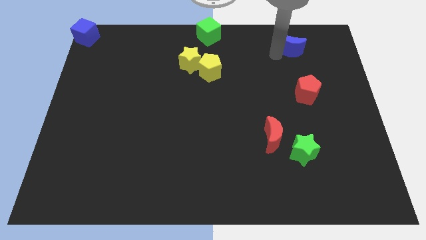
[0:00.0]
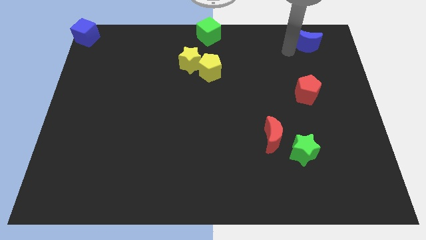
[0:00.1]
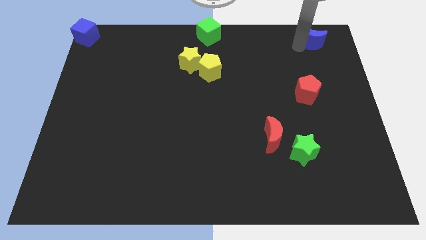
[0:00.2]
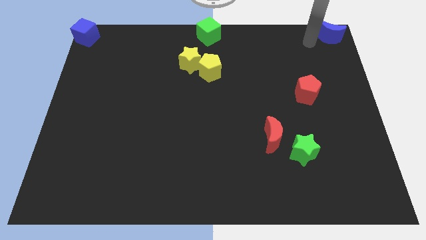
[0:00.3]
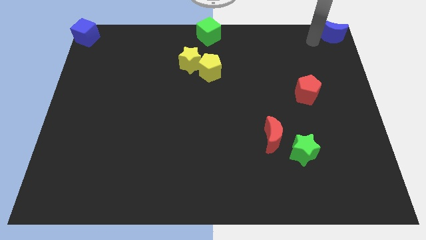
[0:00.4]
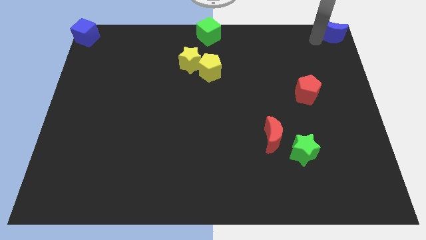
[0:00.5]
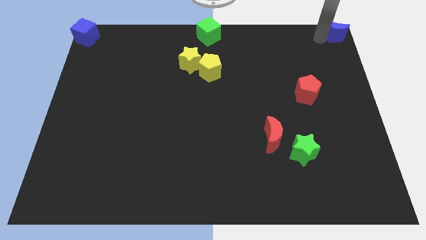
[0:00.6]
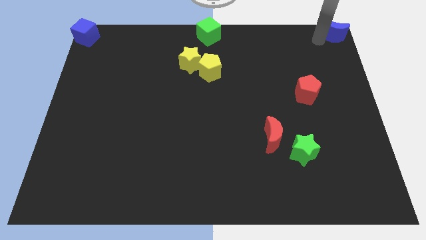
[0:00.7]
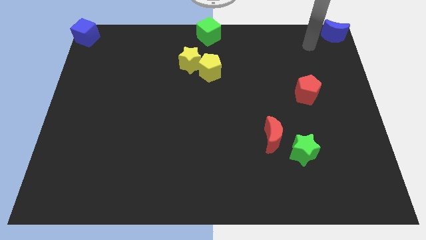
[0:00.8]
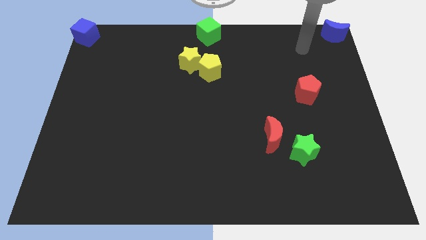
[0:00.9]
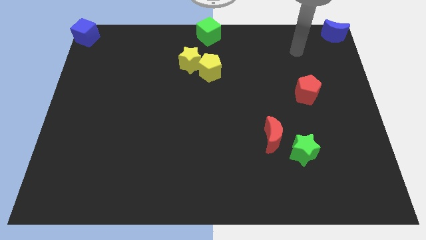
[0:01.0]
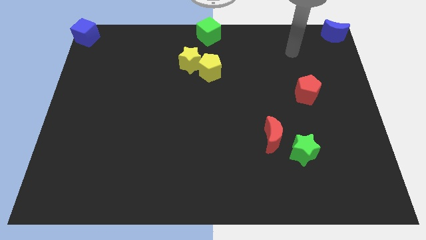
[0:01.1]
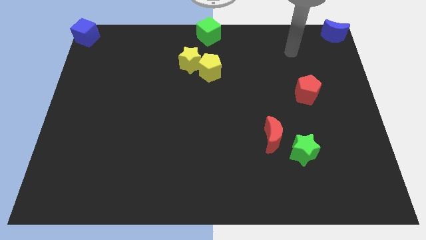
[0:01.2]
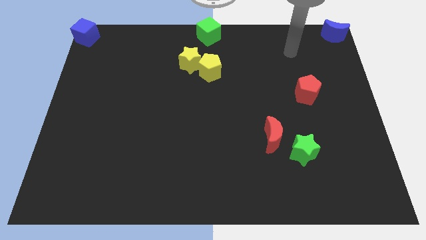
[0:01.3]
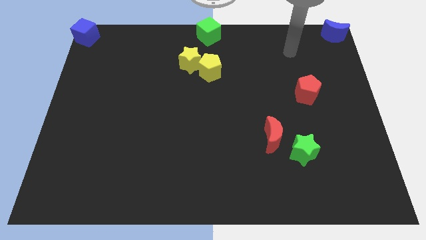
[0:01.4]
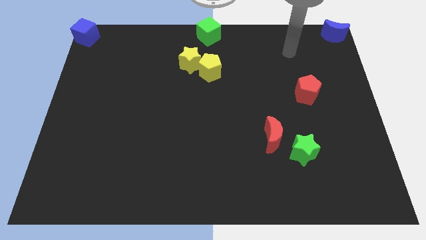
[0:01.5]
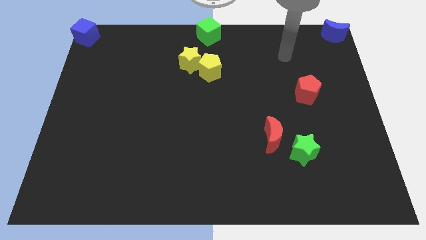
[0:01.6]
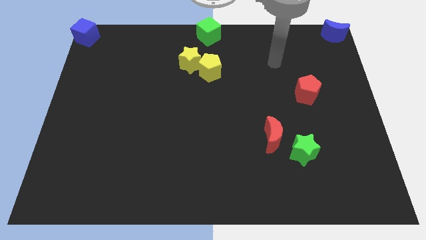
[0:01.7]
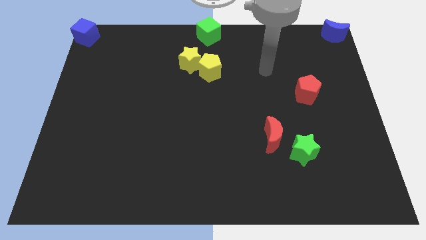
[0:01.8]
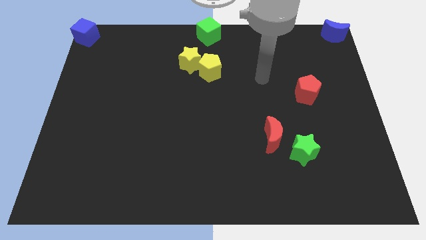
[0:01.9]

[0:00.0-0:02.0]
place blue moon to the top right corner

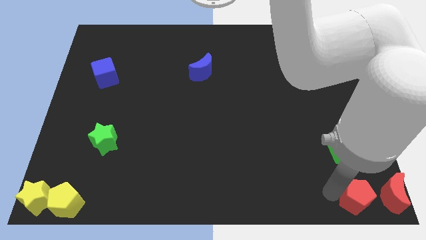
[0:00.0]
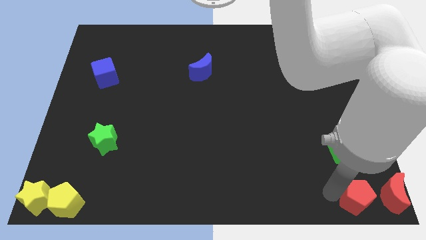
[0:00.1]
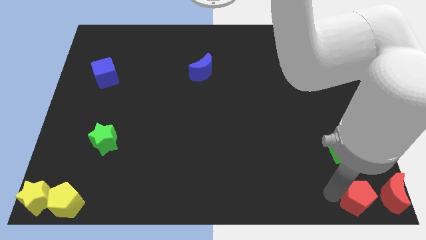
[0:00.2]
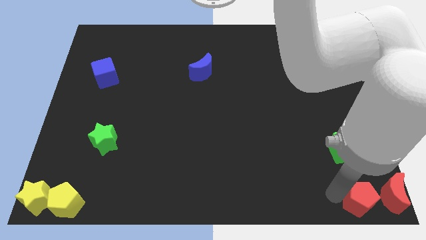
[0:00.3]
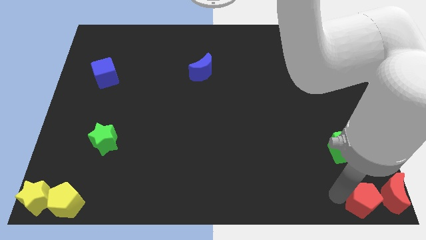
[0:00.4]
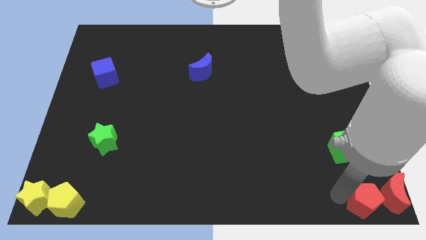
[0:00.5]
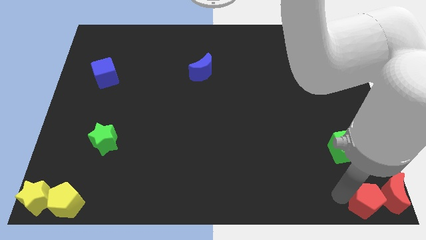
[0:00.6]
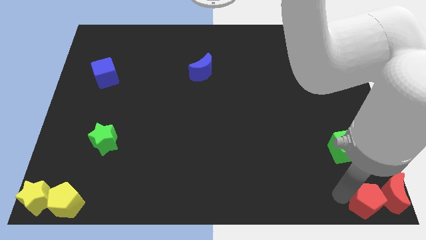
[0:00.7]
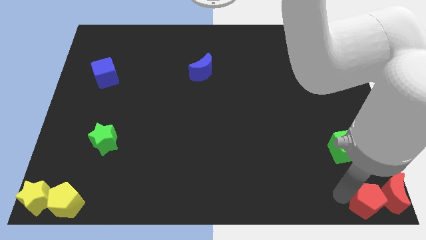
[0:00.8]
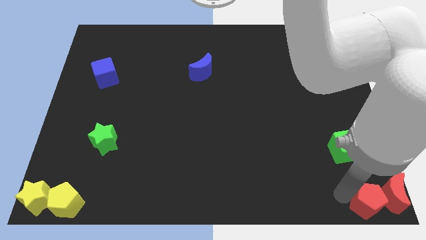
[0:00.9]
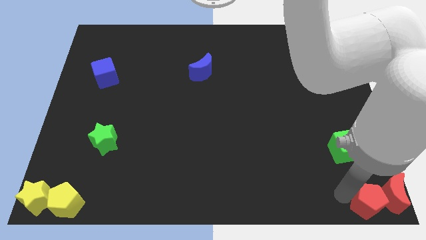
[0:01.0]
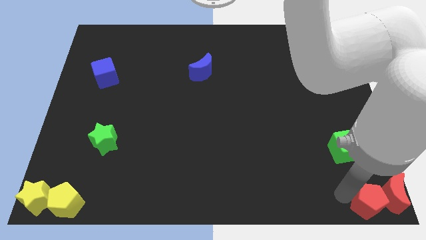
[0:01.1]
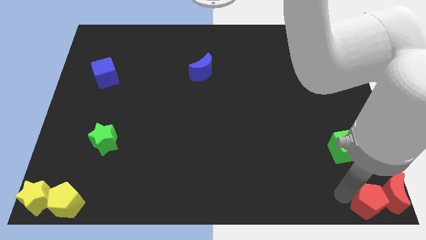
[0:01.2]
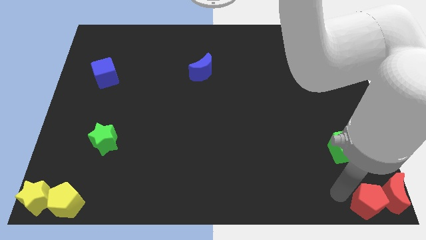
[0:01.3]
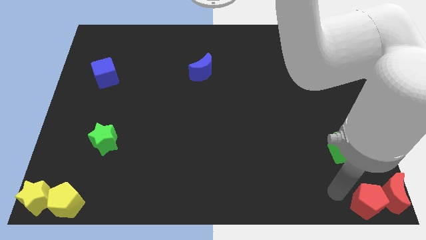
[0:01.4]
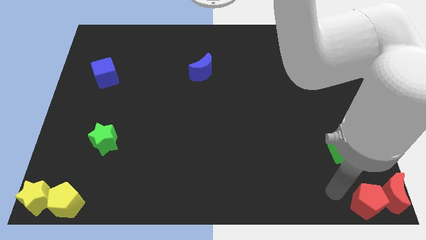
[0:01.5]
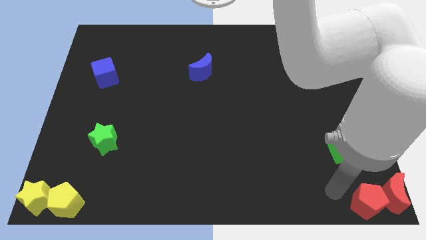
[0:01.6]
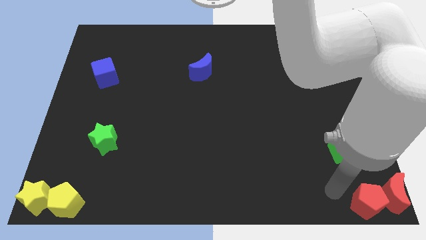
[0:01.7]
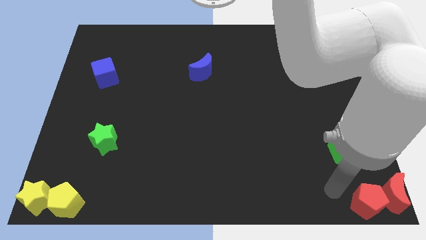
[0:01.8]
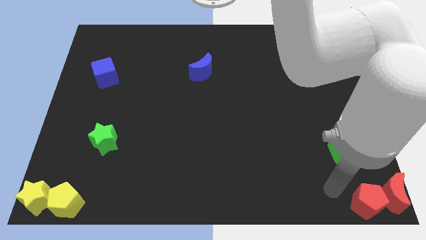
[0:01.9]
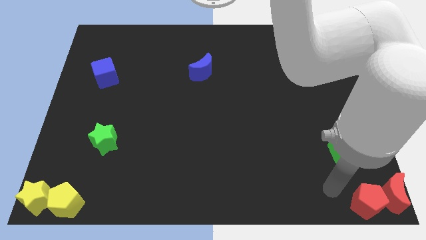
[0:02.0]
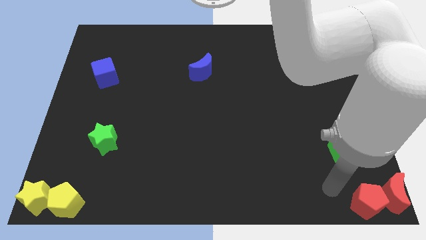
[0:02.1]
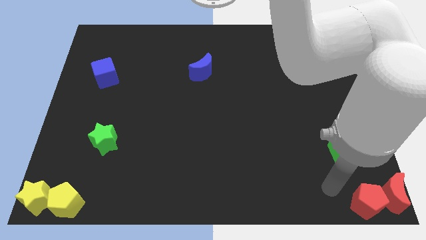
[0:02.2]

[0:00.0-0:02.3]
place the red pentagon to the left side of the red moon

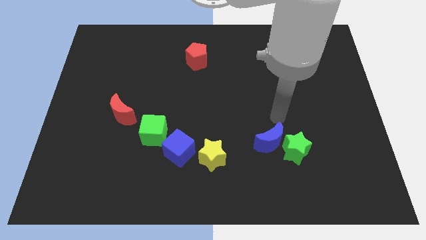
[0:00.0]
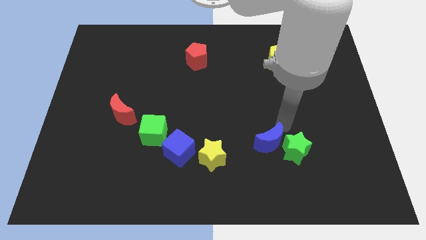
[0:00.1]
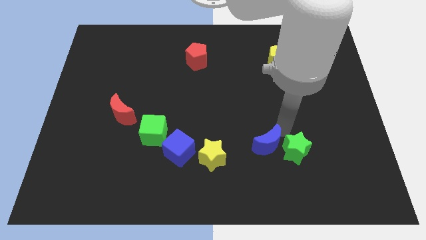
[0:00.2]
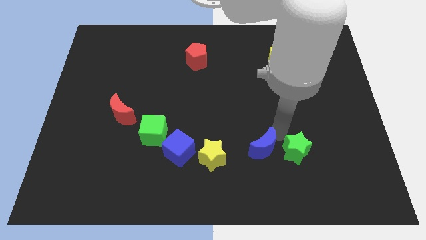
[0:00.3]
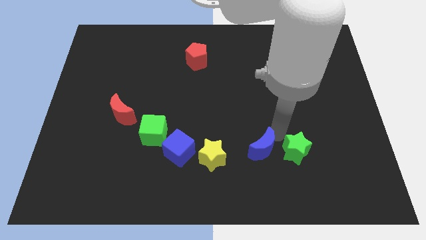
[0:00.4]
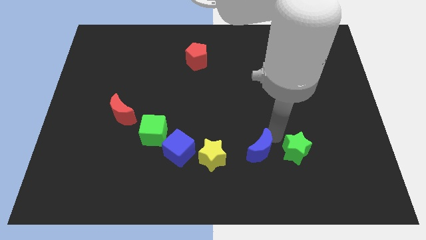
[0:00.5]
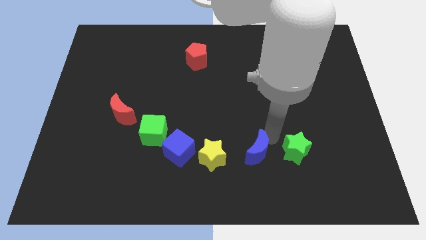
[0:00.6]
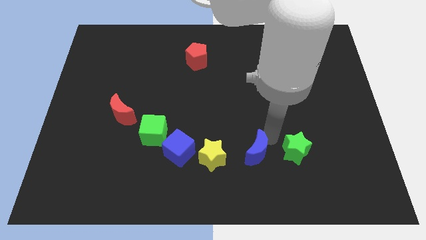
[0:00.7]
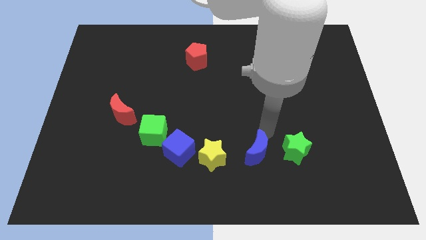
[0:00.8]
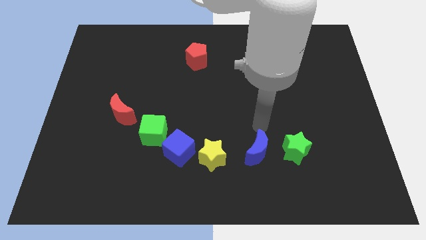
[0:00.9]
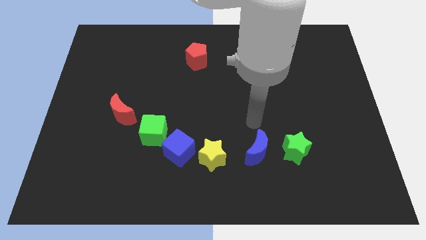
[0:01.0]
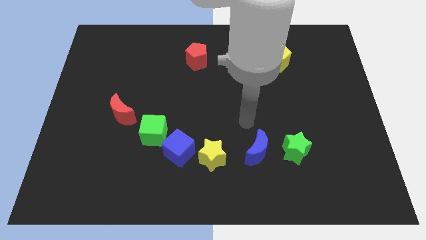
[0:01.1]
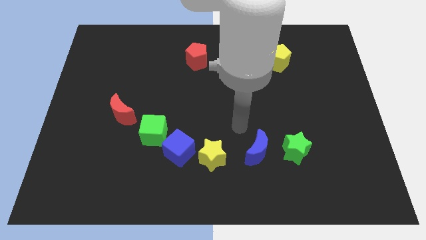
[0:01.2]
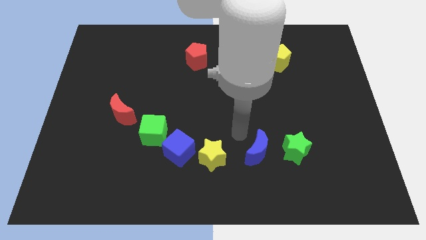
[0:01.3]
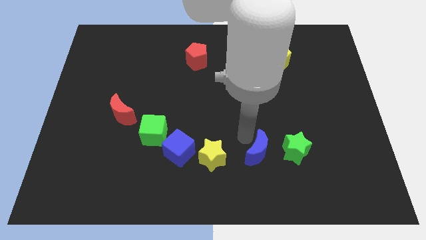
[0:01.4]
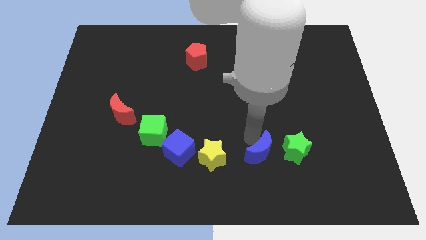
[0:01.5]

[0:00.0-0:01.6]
place blue crescent in between the yellow star and green star

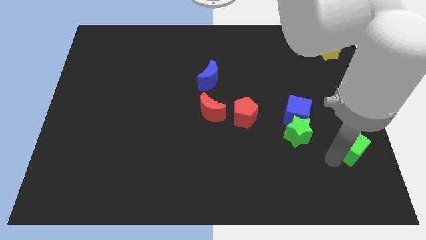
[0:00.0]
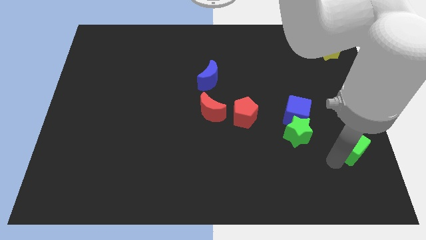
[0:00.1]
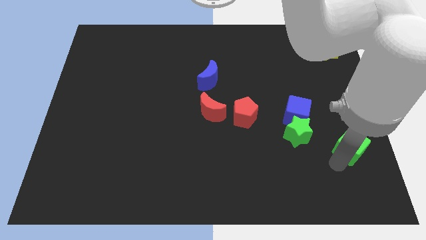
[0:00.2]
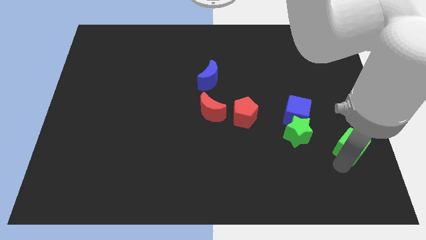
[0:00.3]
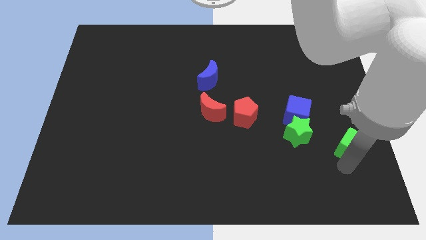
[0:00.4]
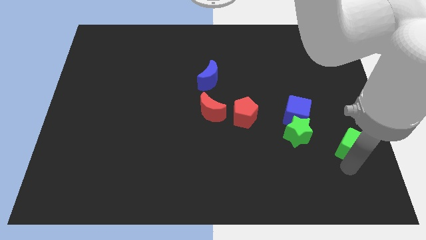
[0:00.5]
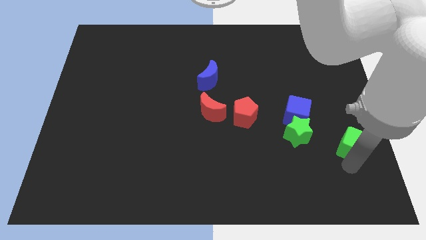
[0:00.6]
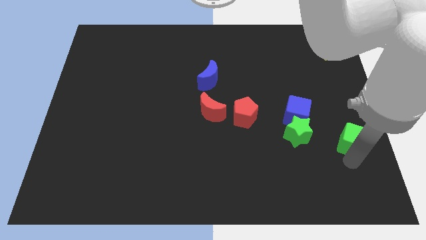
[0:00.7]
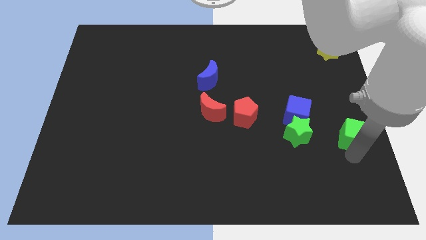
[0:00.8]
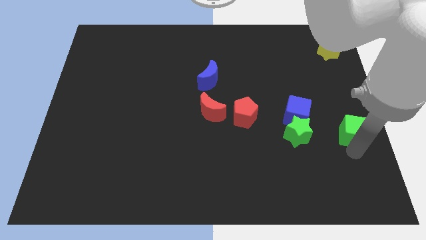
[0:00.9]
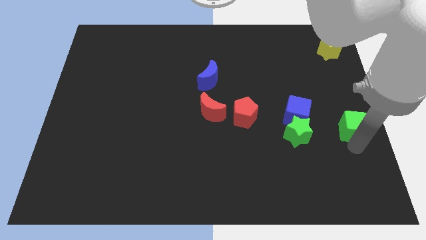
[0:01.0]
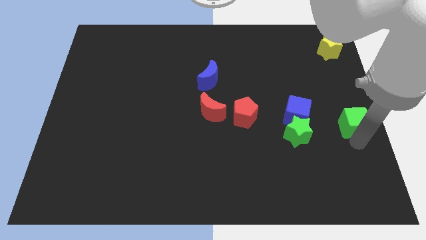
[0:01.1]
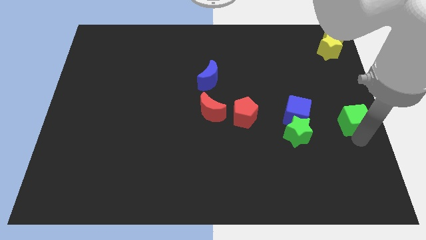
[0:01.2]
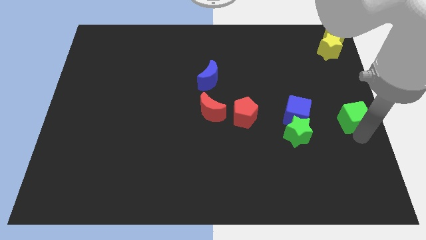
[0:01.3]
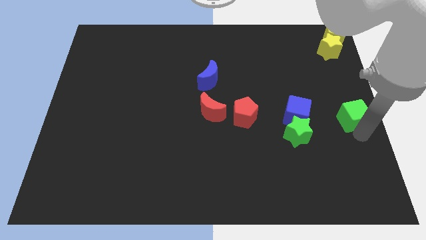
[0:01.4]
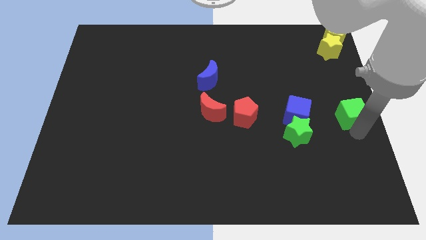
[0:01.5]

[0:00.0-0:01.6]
slide the green cube at the center right of the board

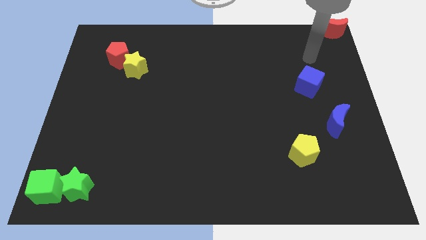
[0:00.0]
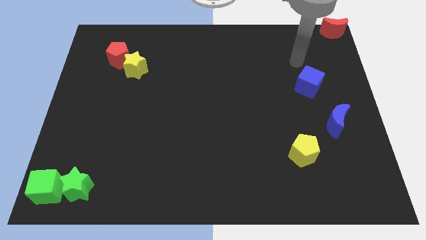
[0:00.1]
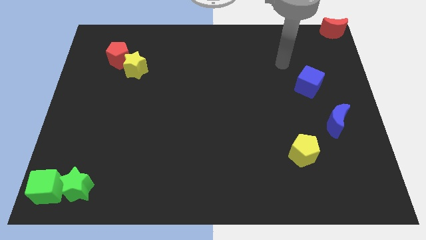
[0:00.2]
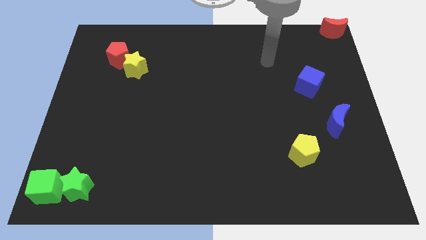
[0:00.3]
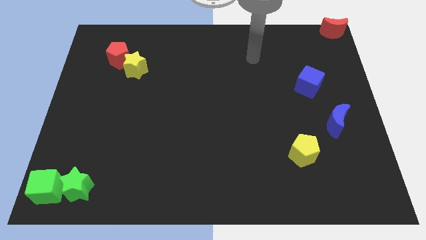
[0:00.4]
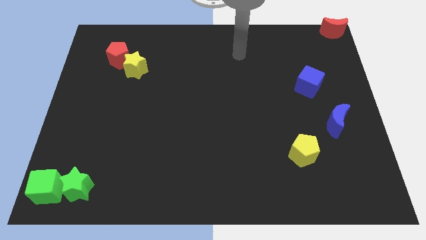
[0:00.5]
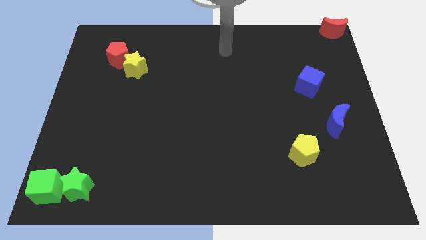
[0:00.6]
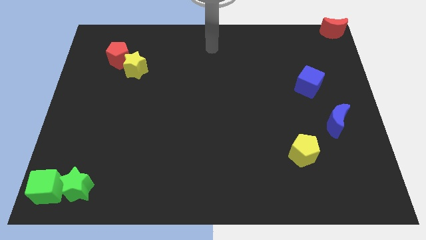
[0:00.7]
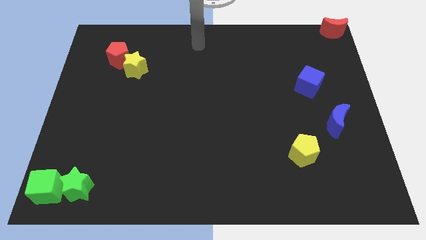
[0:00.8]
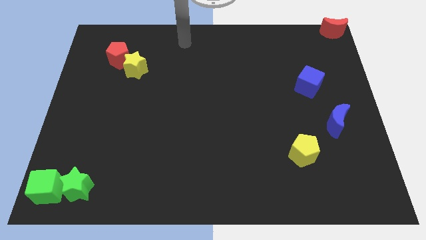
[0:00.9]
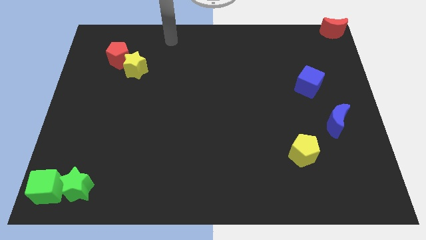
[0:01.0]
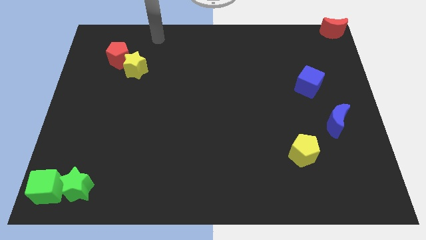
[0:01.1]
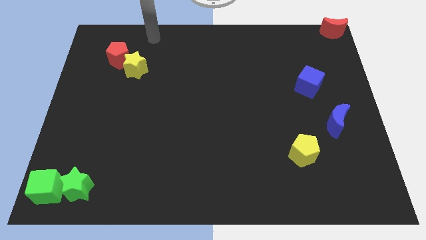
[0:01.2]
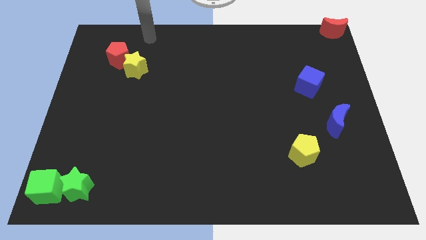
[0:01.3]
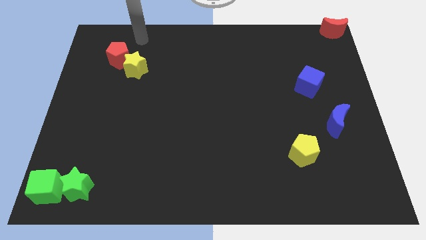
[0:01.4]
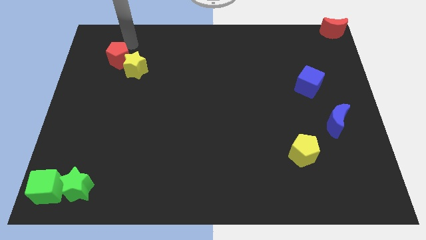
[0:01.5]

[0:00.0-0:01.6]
move your arm towards the red pentagon

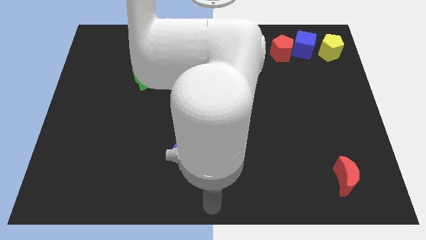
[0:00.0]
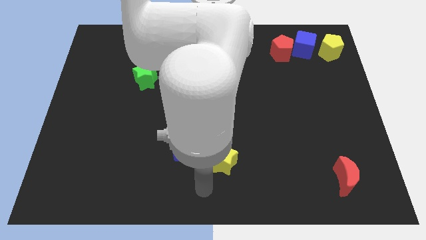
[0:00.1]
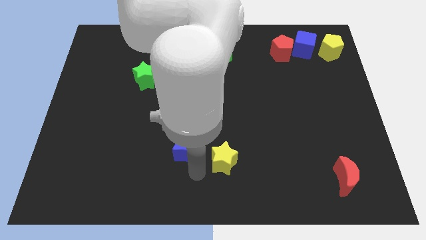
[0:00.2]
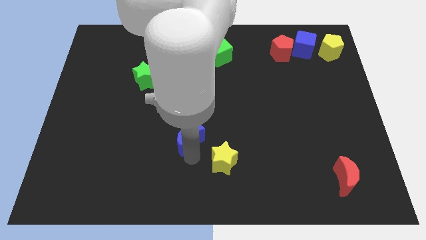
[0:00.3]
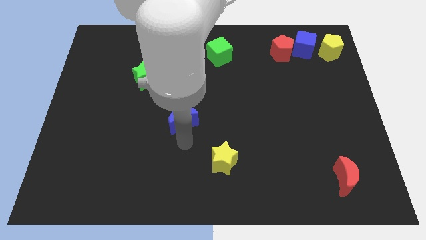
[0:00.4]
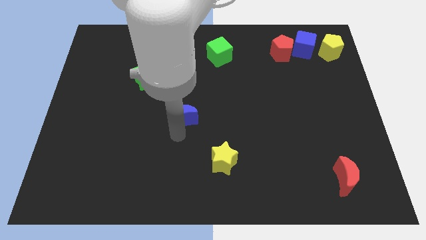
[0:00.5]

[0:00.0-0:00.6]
place the blue moon between yellow star and green star
